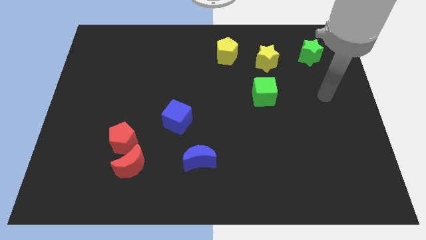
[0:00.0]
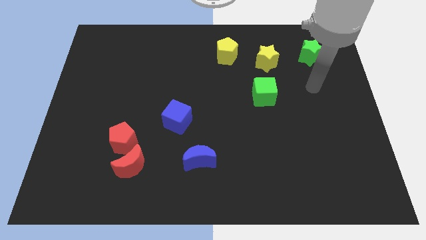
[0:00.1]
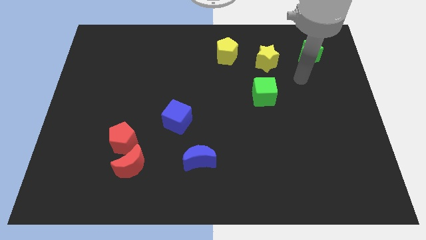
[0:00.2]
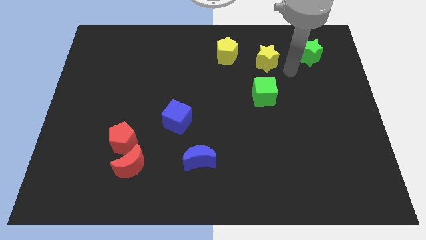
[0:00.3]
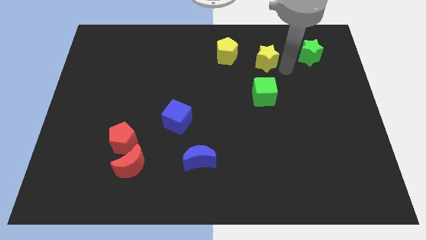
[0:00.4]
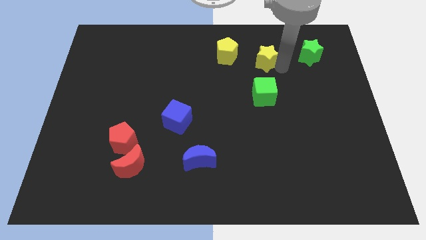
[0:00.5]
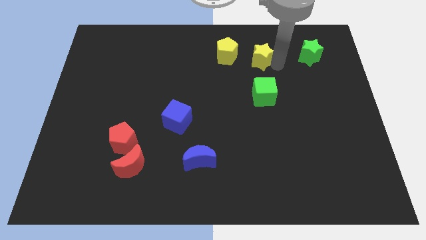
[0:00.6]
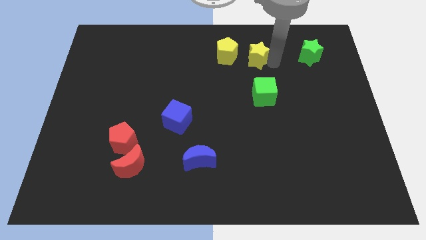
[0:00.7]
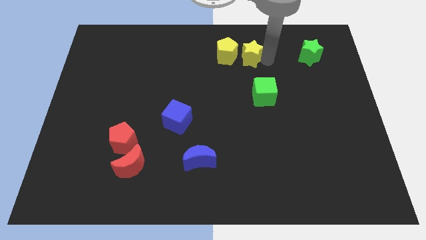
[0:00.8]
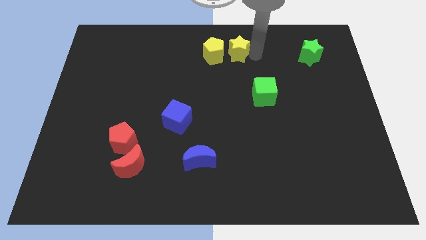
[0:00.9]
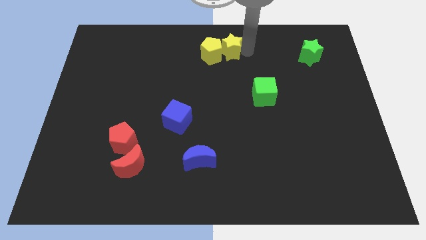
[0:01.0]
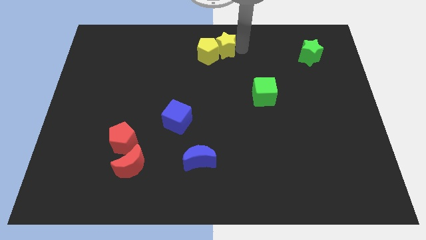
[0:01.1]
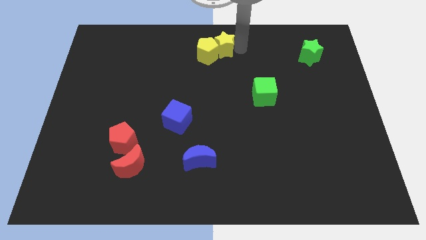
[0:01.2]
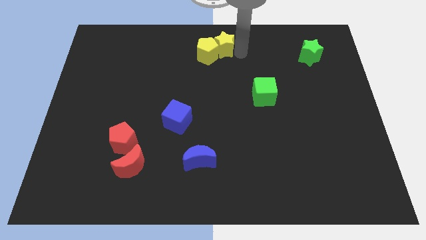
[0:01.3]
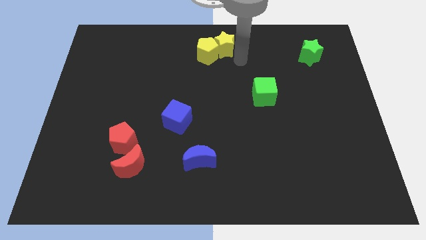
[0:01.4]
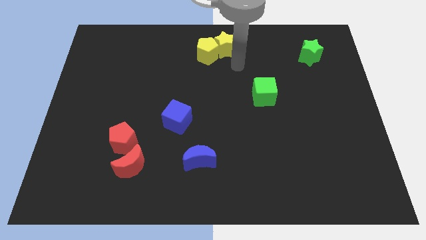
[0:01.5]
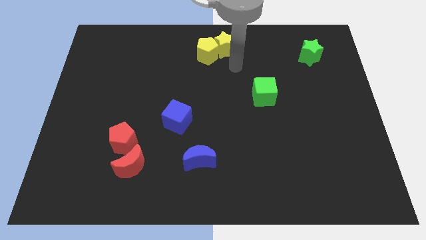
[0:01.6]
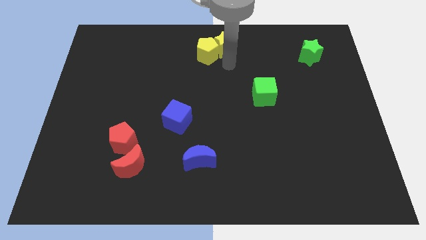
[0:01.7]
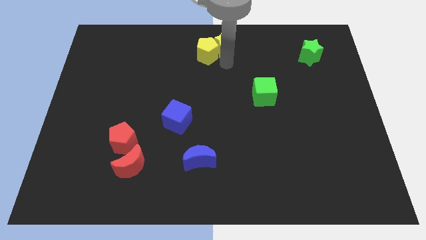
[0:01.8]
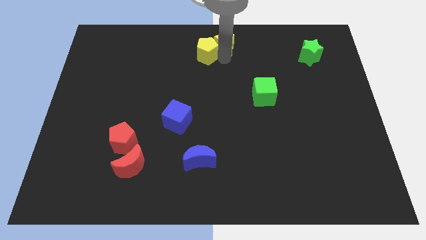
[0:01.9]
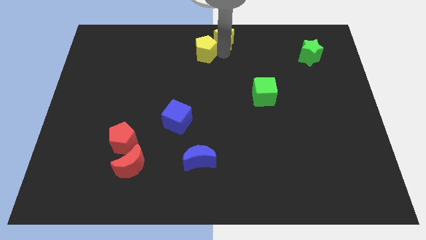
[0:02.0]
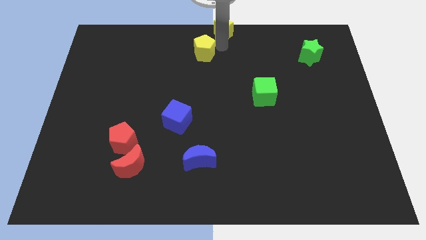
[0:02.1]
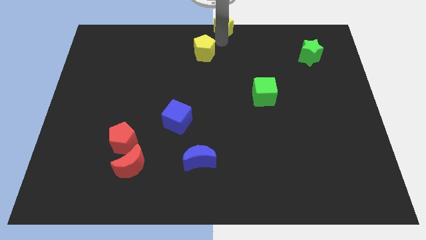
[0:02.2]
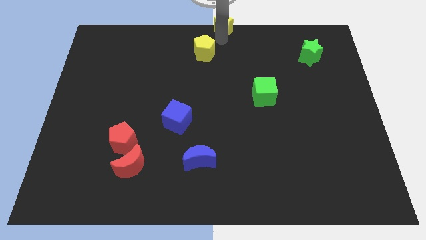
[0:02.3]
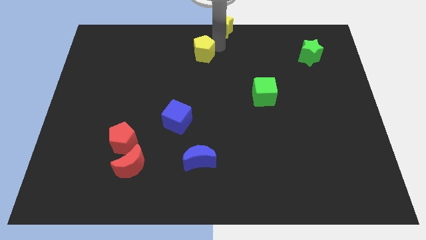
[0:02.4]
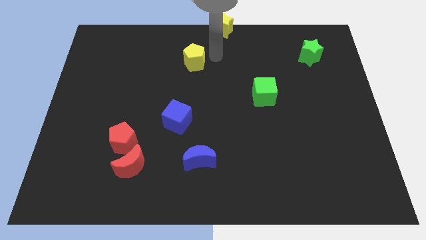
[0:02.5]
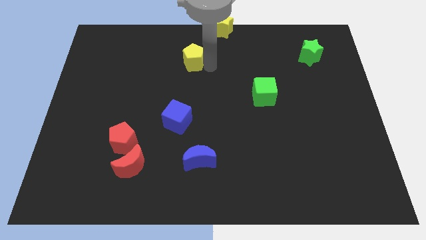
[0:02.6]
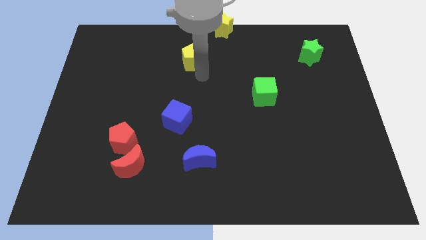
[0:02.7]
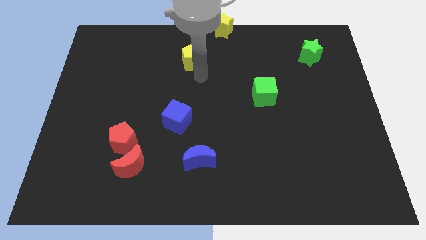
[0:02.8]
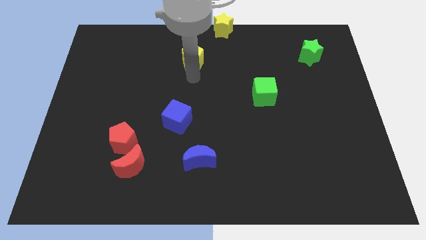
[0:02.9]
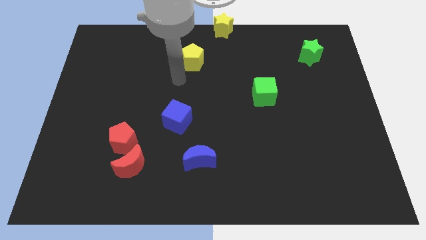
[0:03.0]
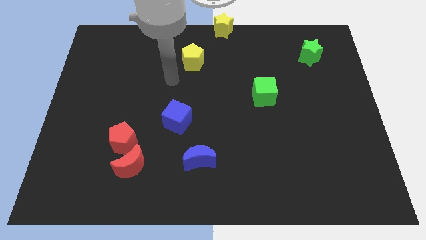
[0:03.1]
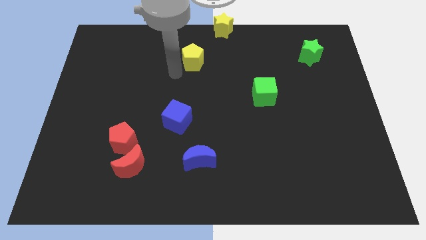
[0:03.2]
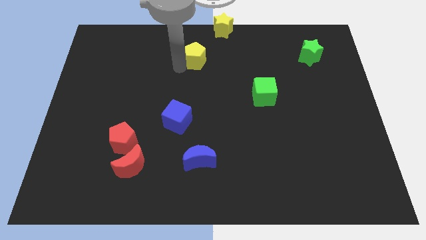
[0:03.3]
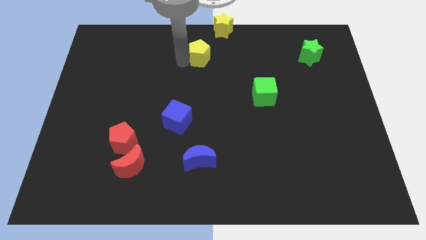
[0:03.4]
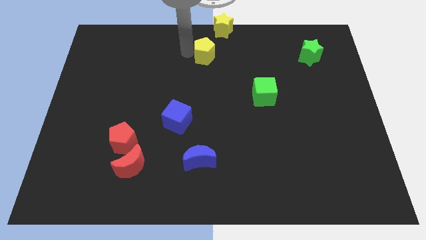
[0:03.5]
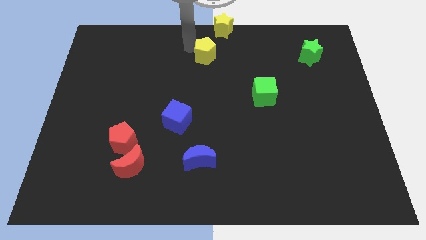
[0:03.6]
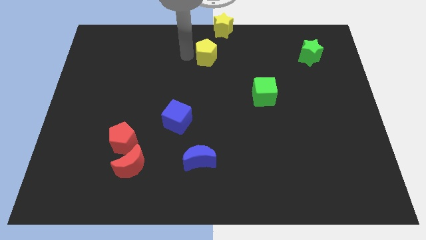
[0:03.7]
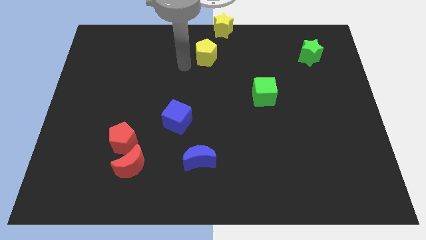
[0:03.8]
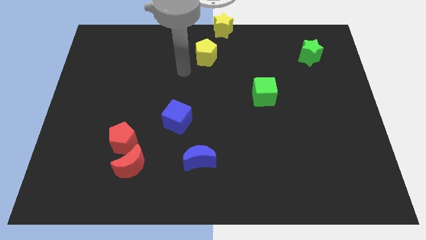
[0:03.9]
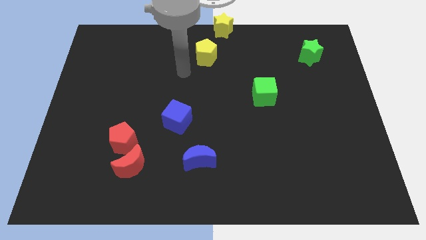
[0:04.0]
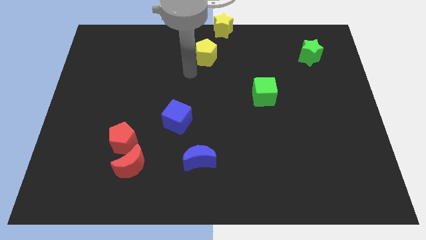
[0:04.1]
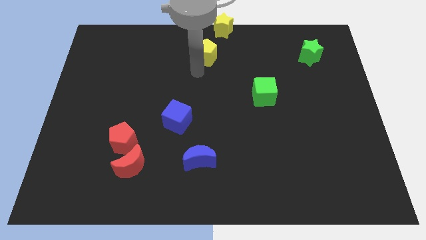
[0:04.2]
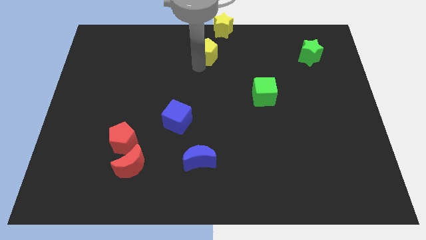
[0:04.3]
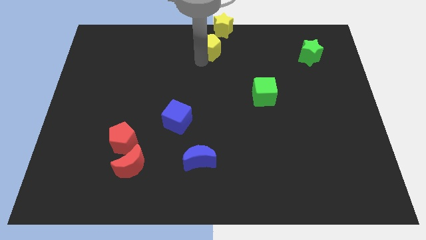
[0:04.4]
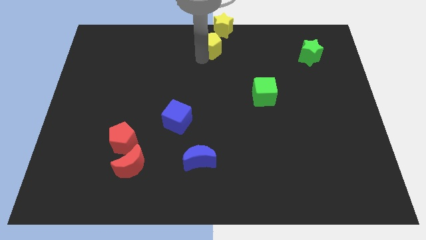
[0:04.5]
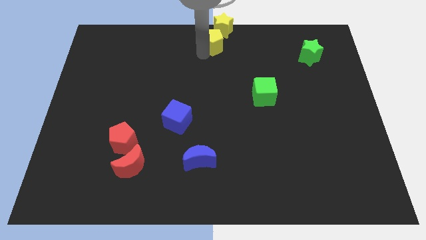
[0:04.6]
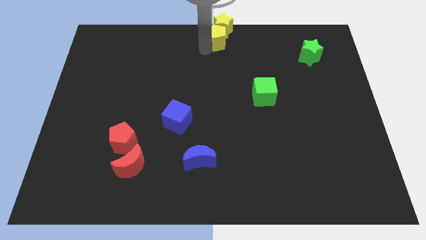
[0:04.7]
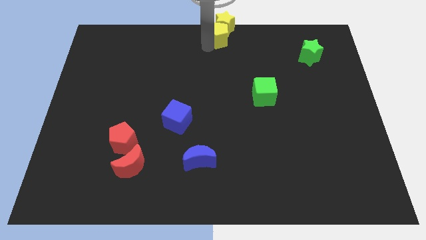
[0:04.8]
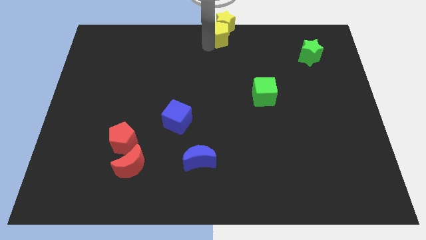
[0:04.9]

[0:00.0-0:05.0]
move the yellow blocks to the top center

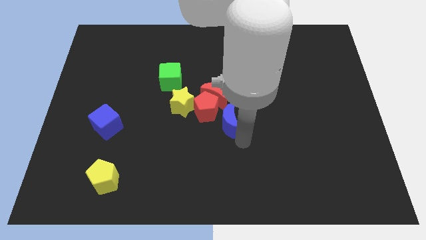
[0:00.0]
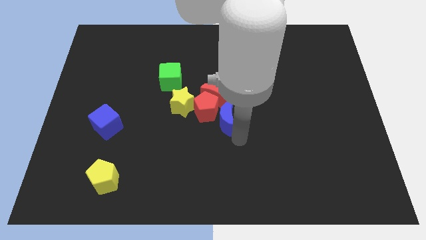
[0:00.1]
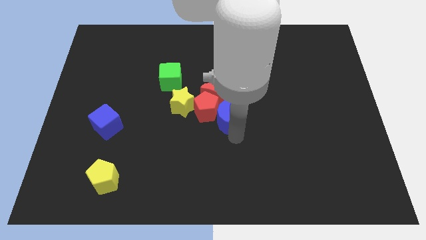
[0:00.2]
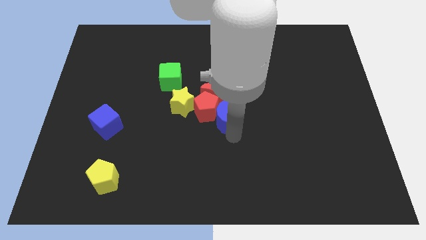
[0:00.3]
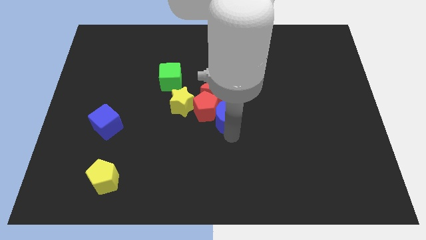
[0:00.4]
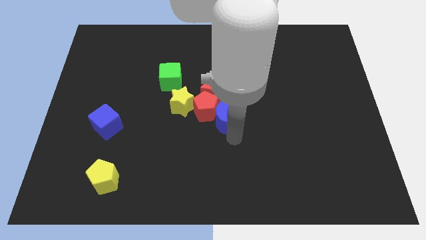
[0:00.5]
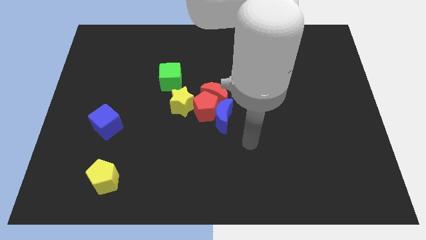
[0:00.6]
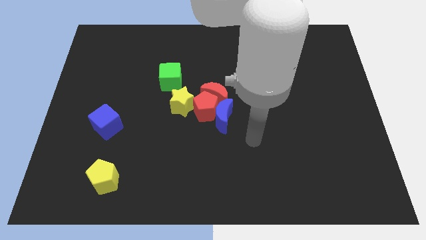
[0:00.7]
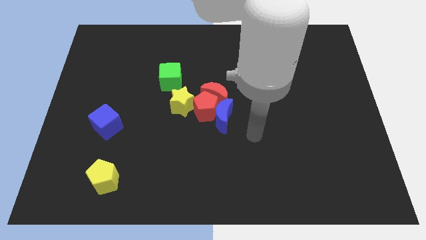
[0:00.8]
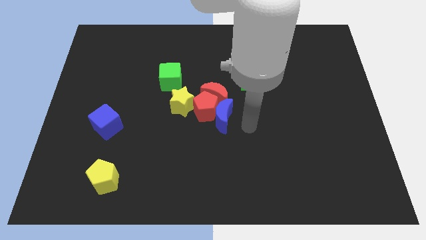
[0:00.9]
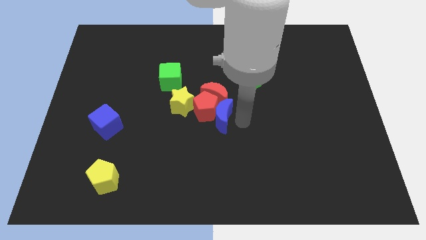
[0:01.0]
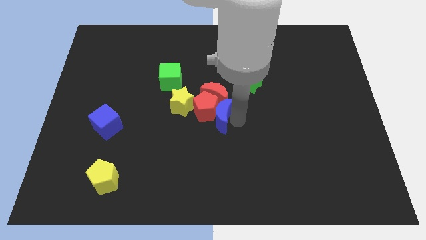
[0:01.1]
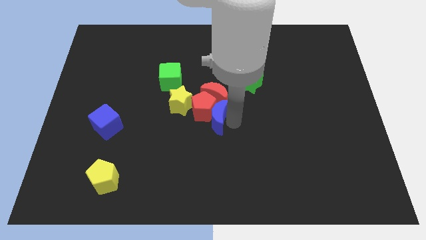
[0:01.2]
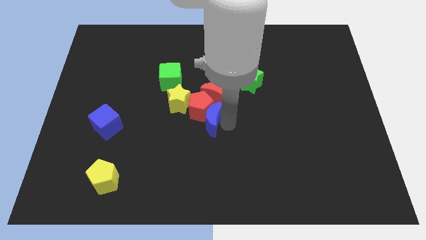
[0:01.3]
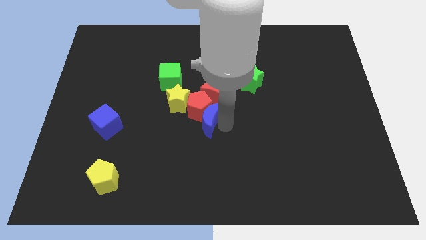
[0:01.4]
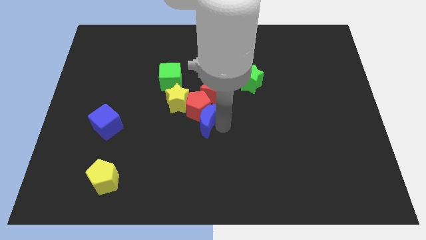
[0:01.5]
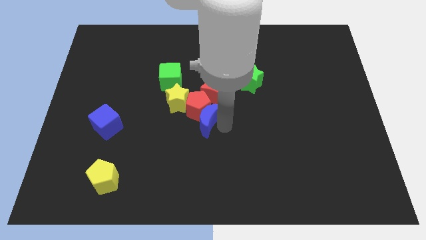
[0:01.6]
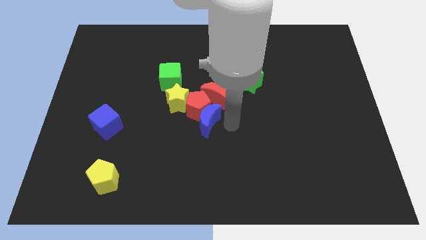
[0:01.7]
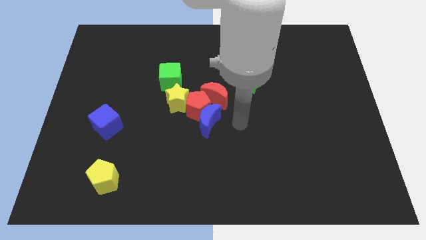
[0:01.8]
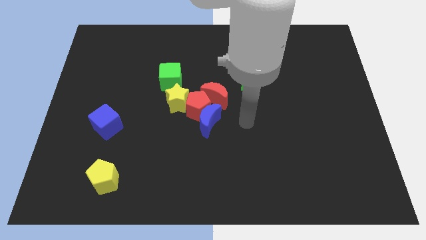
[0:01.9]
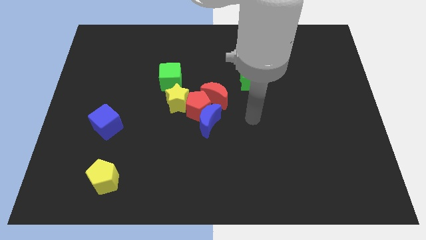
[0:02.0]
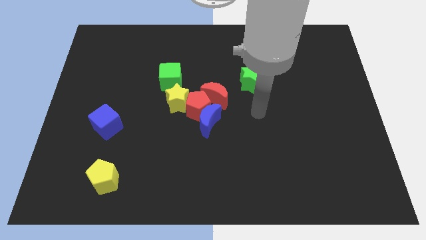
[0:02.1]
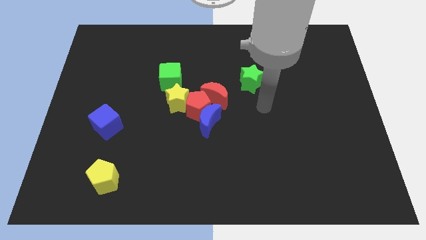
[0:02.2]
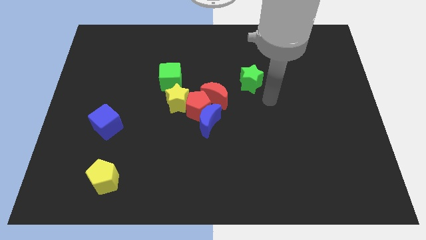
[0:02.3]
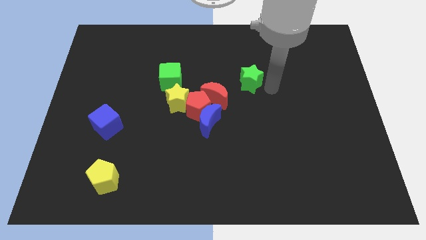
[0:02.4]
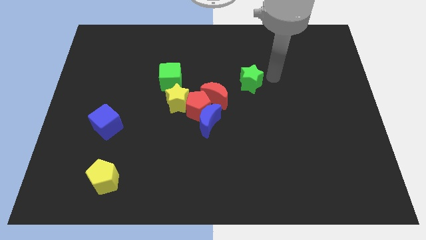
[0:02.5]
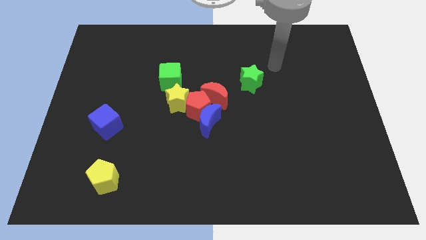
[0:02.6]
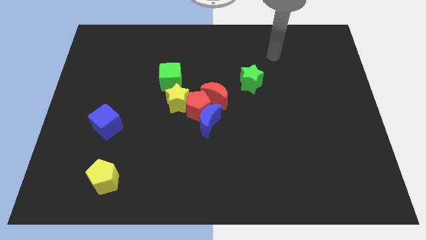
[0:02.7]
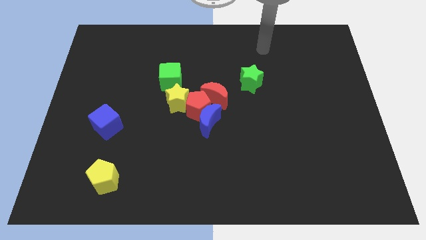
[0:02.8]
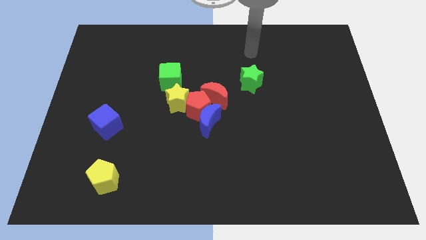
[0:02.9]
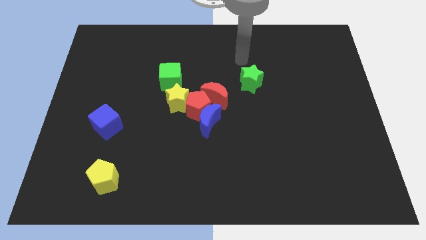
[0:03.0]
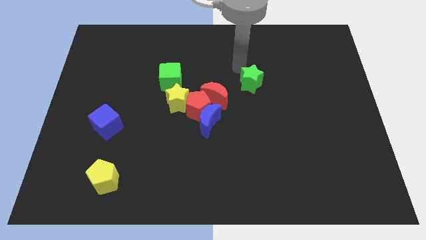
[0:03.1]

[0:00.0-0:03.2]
move the blue crescent slightly to the left

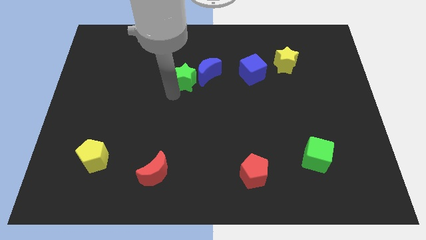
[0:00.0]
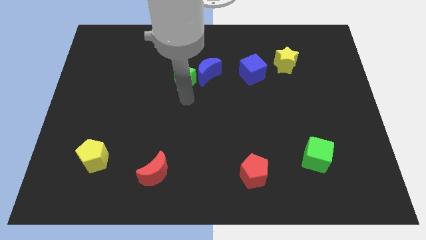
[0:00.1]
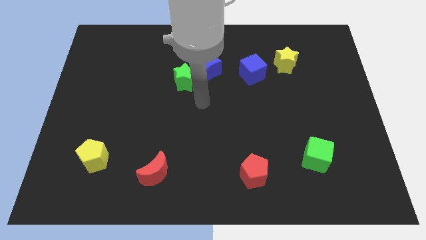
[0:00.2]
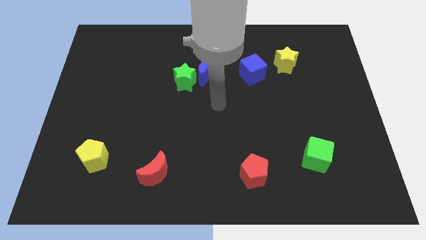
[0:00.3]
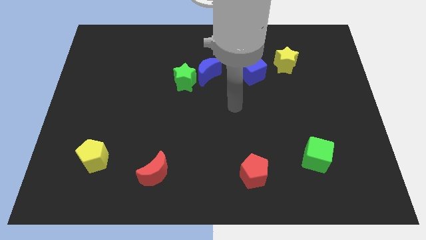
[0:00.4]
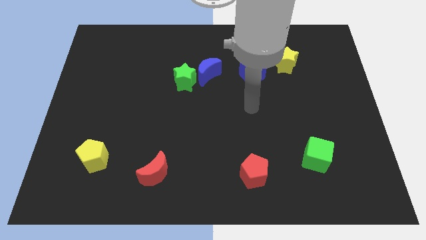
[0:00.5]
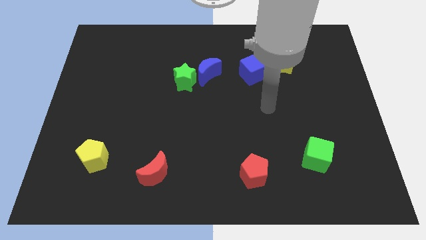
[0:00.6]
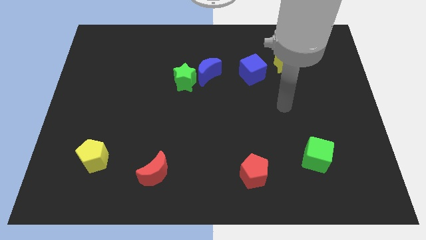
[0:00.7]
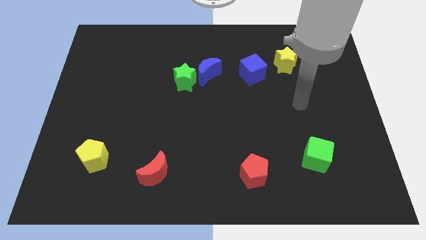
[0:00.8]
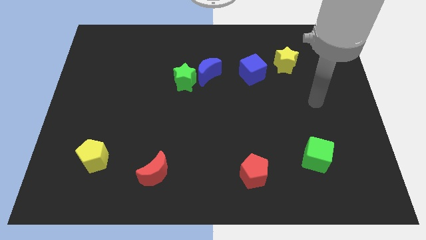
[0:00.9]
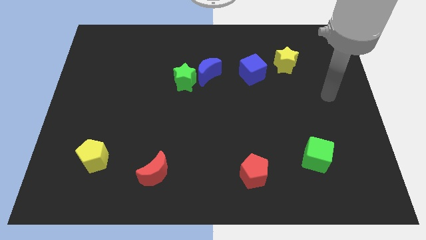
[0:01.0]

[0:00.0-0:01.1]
move the arm away from the green star
